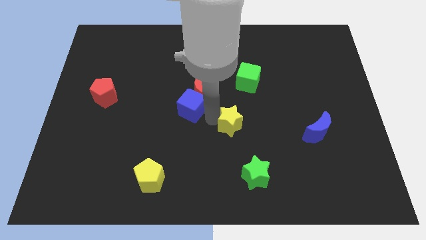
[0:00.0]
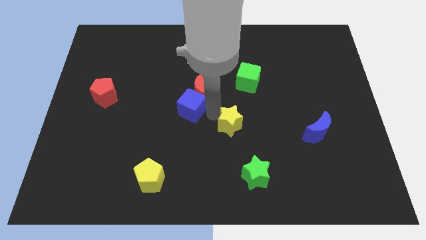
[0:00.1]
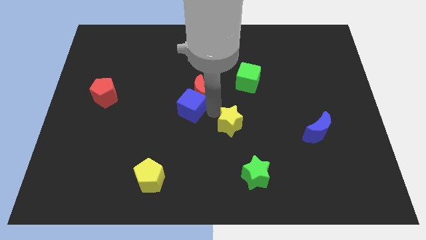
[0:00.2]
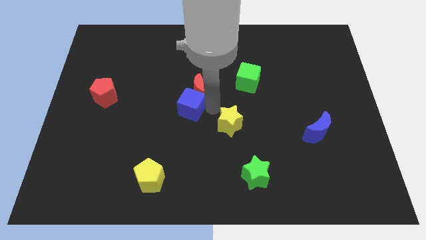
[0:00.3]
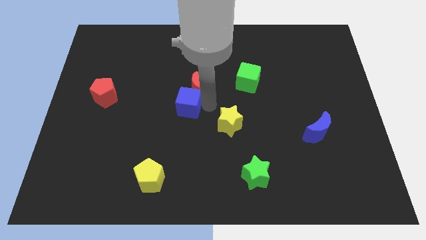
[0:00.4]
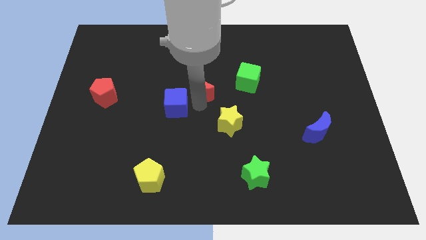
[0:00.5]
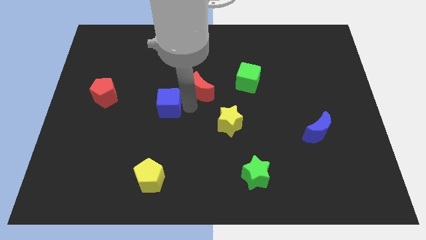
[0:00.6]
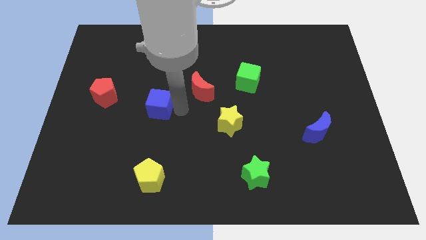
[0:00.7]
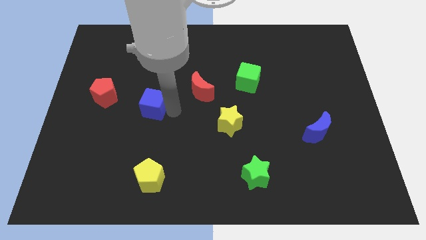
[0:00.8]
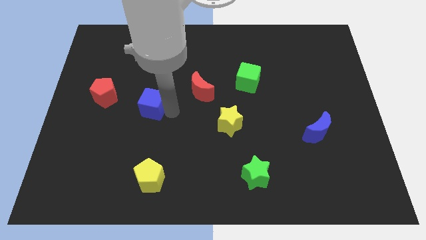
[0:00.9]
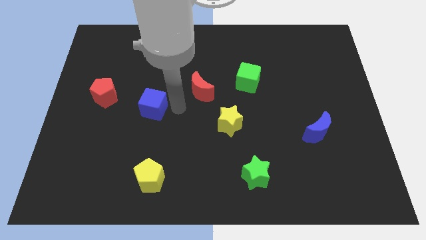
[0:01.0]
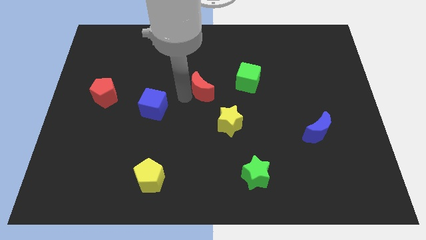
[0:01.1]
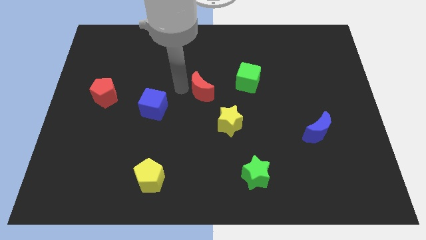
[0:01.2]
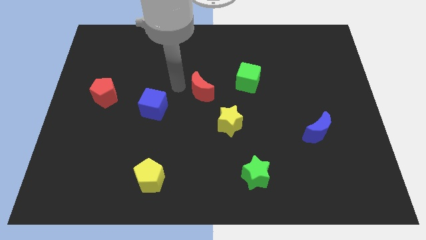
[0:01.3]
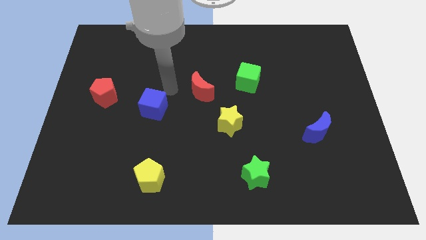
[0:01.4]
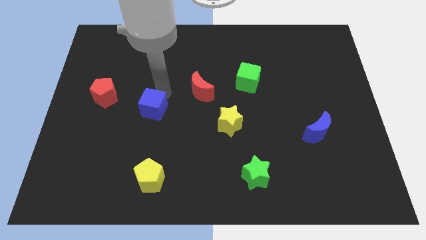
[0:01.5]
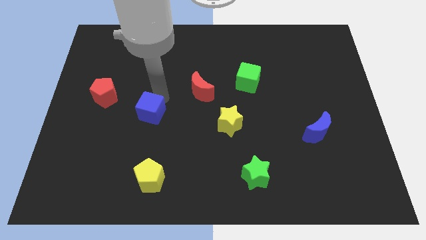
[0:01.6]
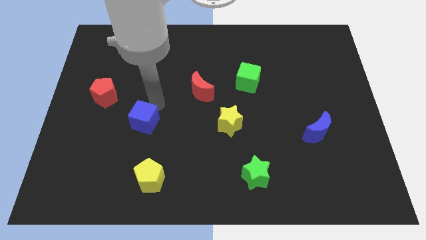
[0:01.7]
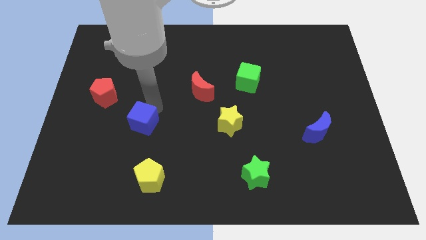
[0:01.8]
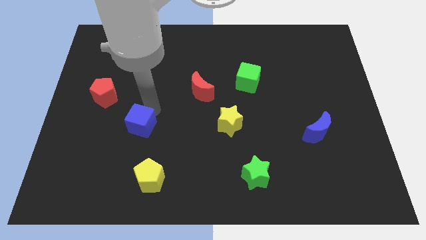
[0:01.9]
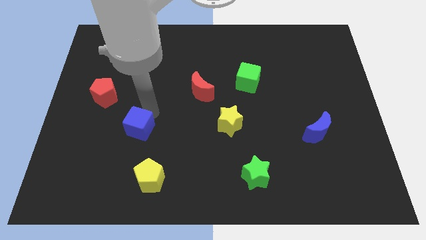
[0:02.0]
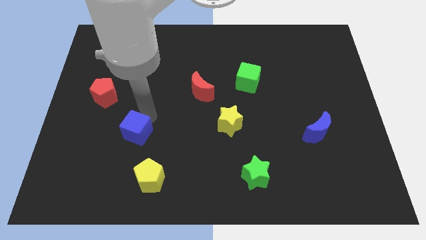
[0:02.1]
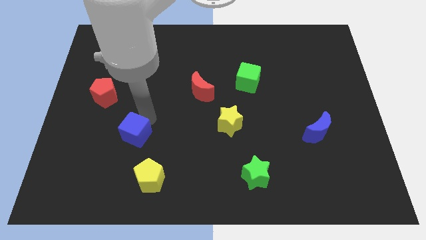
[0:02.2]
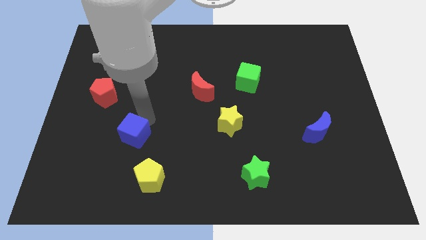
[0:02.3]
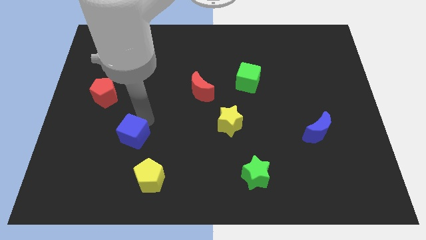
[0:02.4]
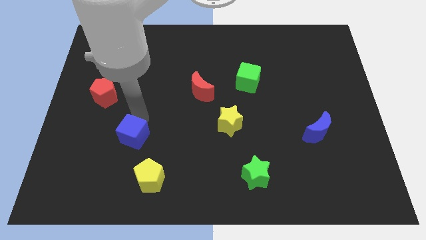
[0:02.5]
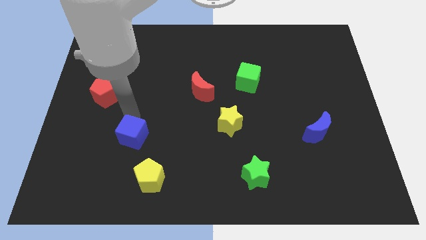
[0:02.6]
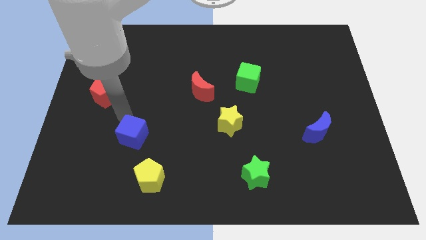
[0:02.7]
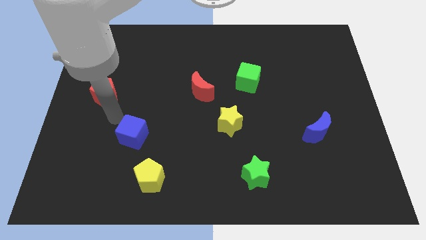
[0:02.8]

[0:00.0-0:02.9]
place the blue cube diagonally top left to the yellow pentagon

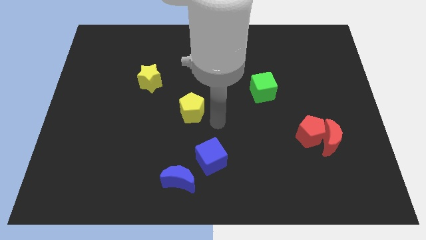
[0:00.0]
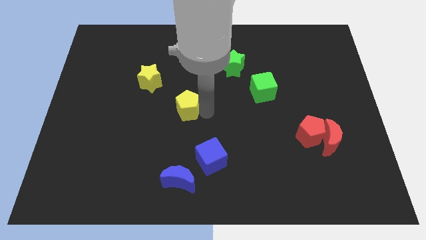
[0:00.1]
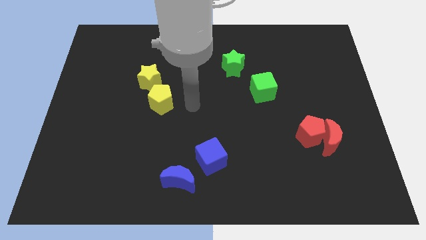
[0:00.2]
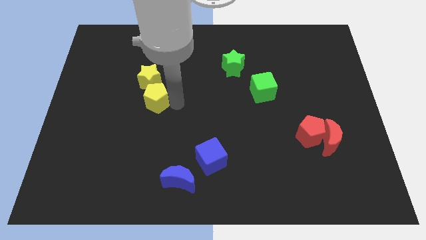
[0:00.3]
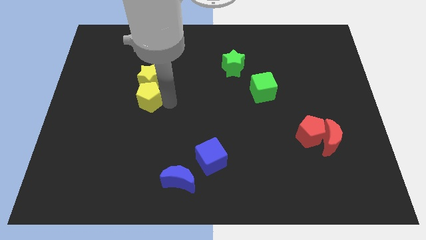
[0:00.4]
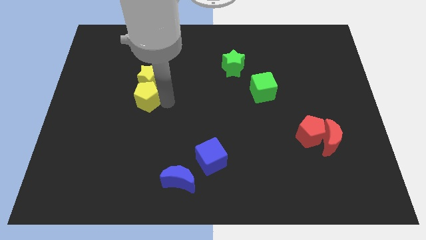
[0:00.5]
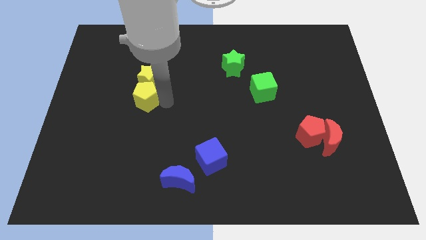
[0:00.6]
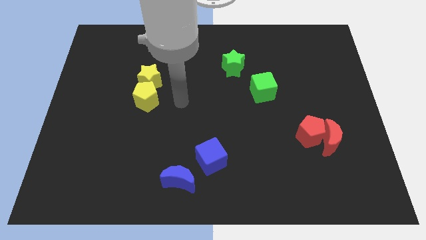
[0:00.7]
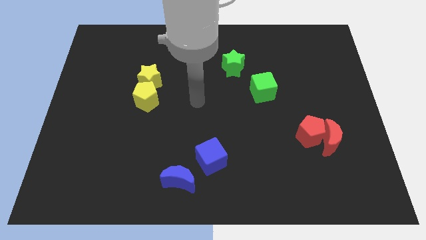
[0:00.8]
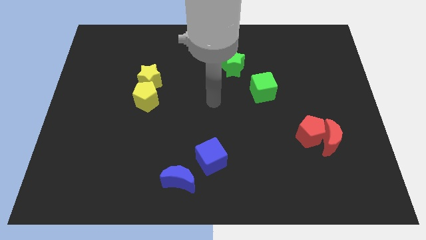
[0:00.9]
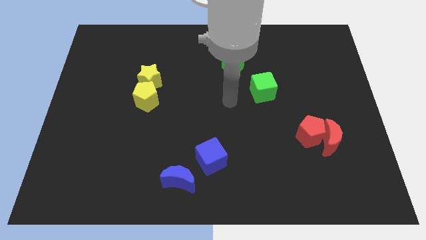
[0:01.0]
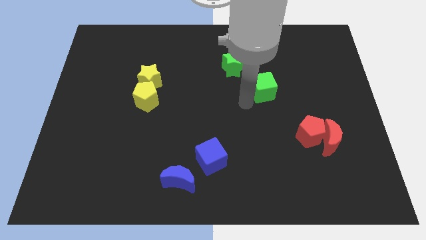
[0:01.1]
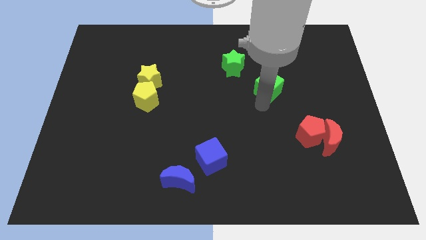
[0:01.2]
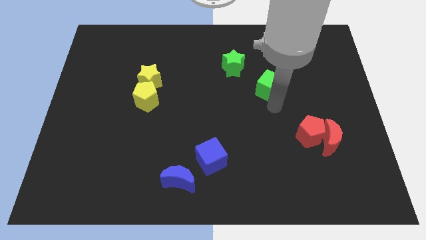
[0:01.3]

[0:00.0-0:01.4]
place the yellow pentagon below the yellow star

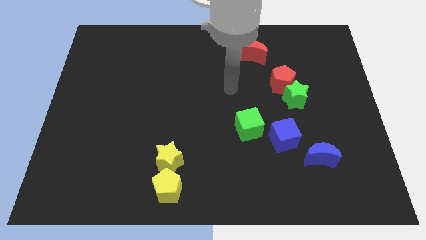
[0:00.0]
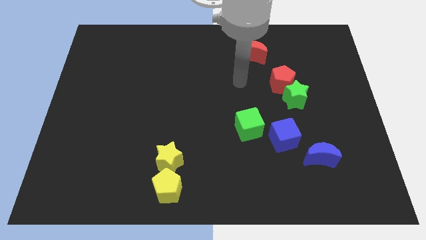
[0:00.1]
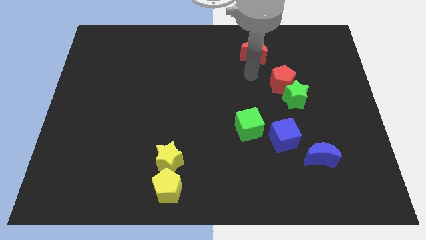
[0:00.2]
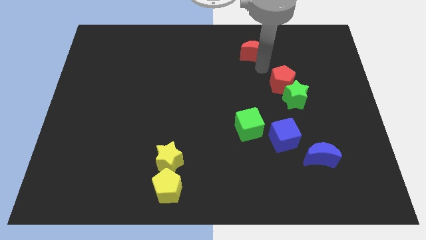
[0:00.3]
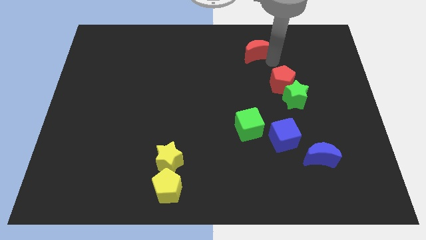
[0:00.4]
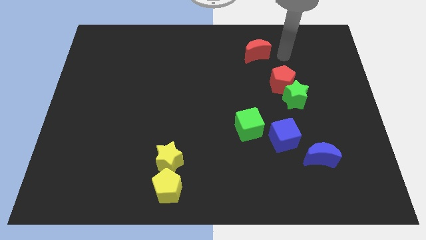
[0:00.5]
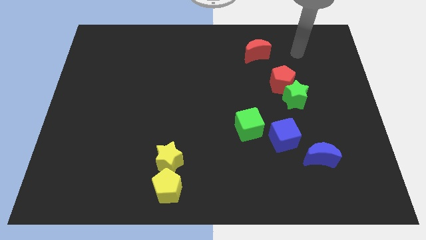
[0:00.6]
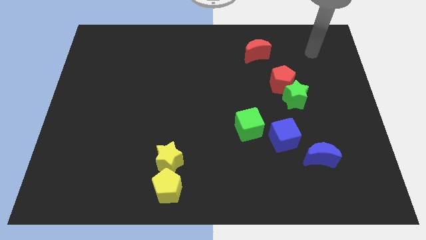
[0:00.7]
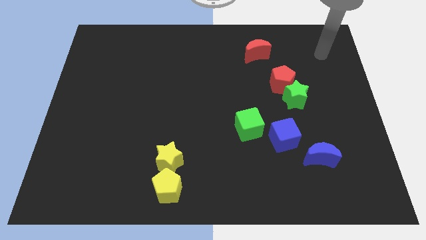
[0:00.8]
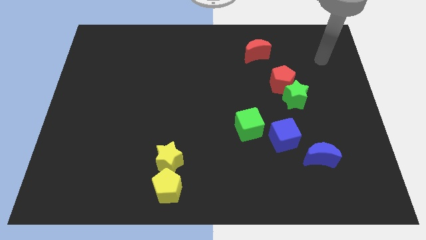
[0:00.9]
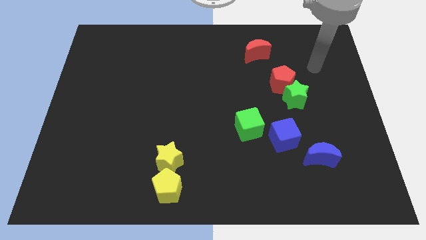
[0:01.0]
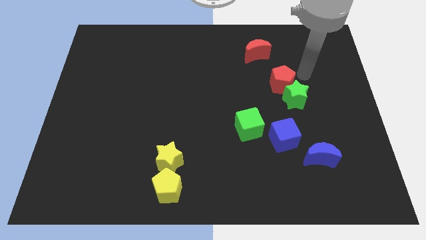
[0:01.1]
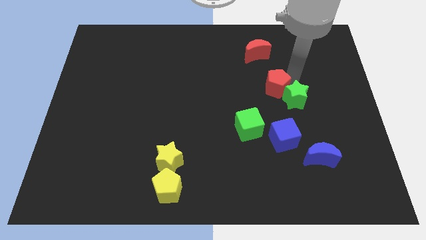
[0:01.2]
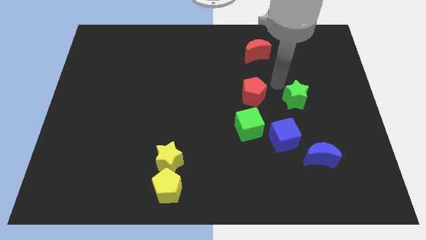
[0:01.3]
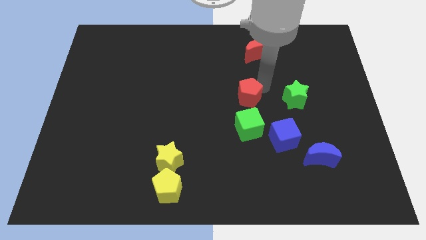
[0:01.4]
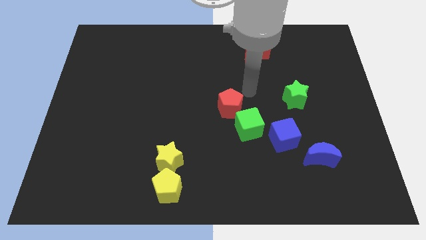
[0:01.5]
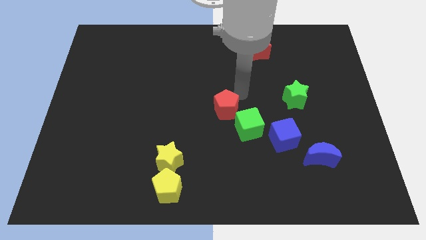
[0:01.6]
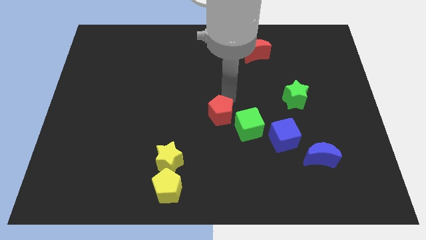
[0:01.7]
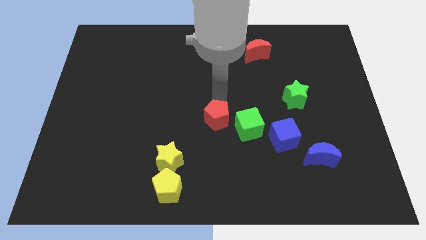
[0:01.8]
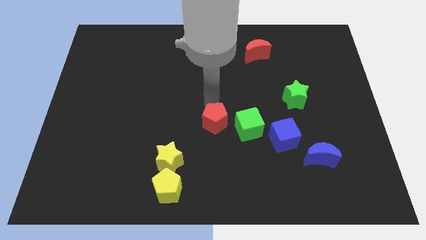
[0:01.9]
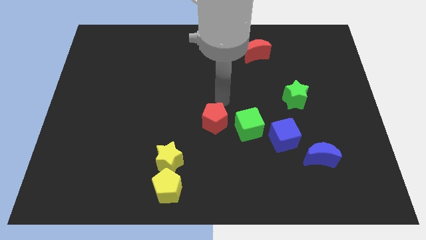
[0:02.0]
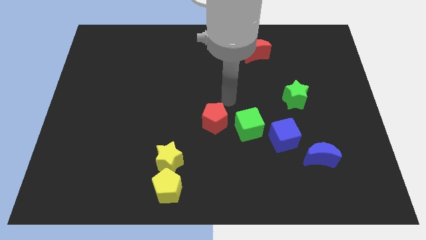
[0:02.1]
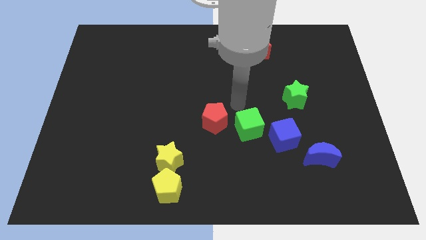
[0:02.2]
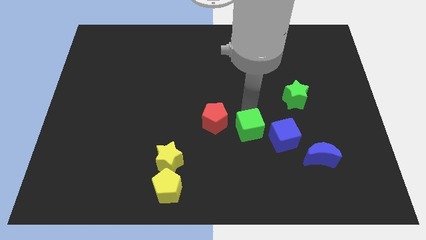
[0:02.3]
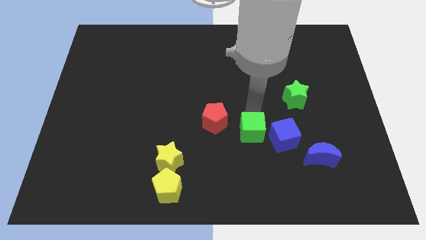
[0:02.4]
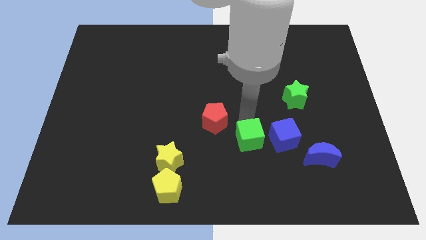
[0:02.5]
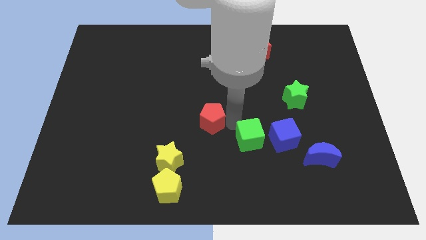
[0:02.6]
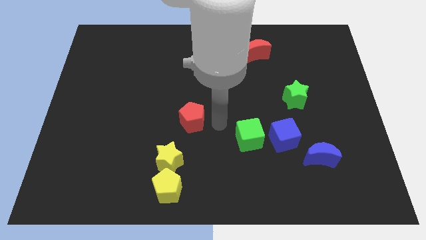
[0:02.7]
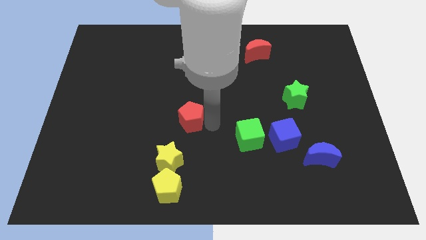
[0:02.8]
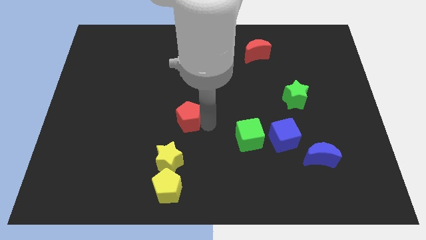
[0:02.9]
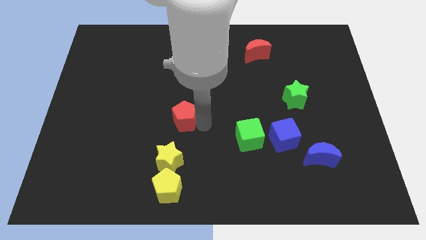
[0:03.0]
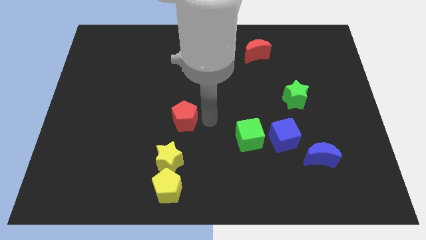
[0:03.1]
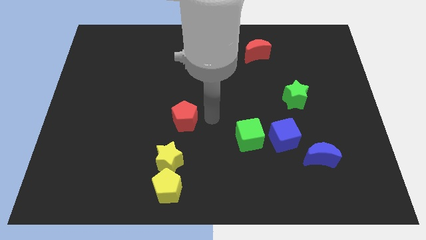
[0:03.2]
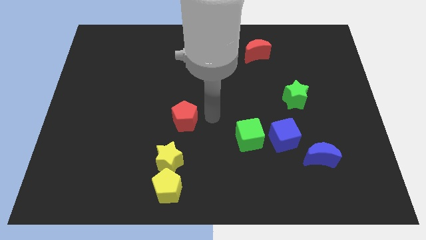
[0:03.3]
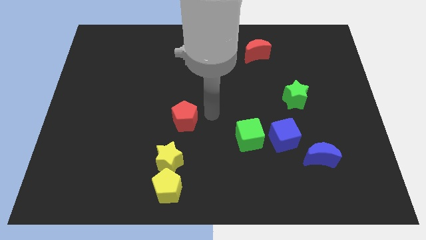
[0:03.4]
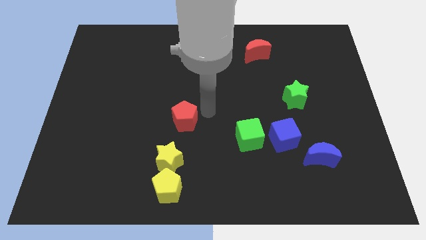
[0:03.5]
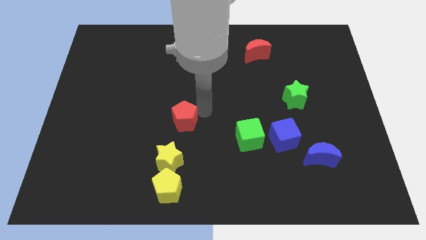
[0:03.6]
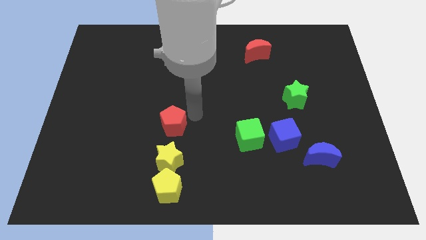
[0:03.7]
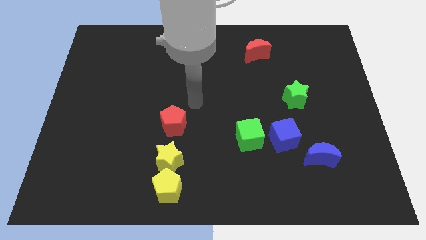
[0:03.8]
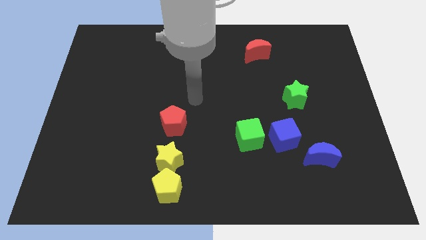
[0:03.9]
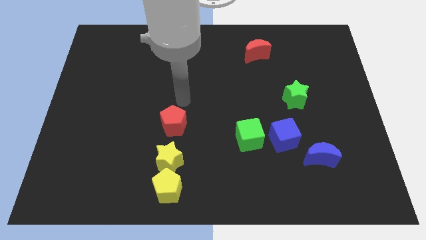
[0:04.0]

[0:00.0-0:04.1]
place the red pentagon above the yellow star

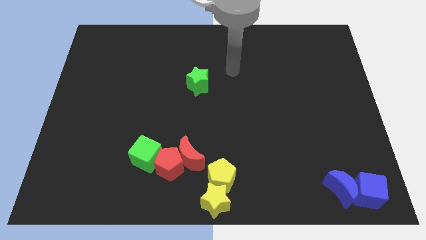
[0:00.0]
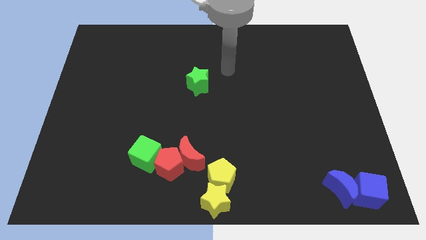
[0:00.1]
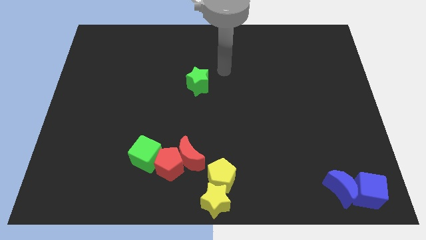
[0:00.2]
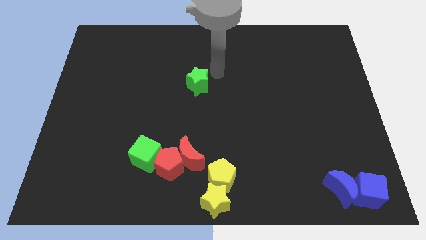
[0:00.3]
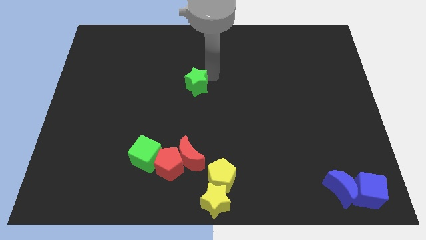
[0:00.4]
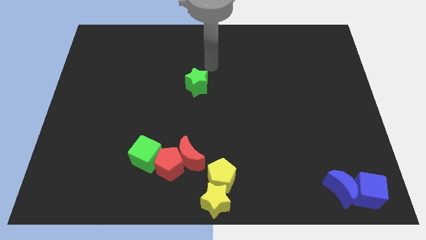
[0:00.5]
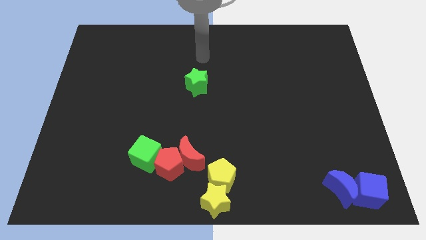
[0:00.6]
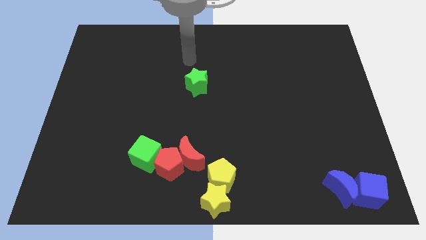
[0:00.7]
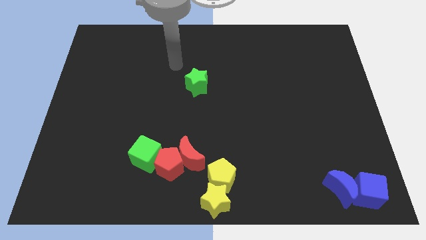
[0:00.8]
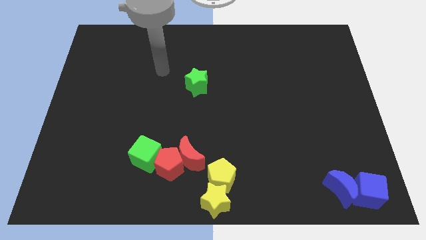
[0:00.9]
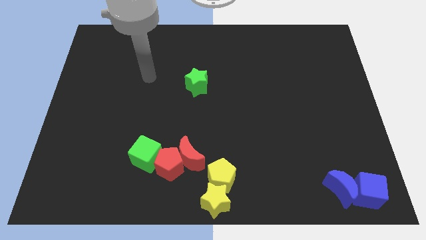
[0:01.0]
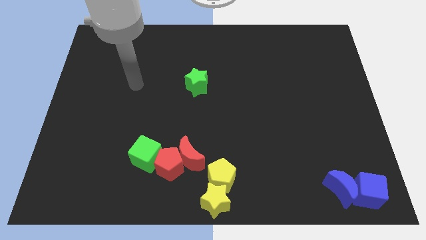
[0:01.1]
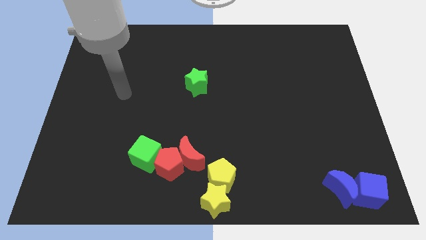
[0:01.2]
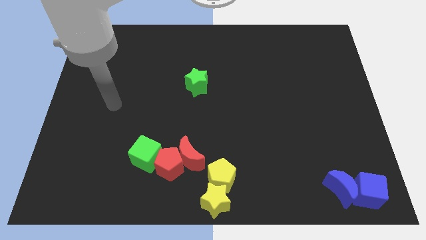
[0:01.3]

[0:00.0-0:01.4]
touch the green star
